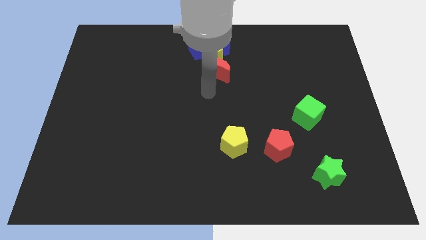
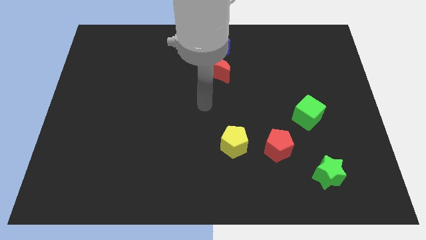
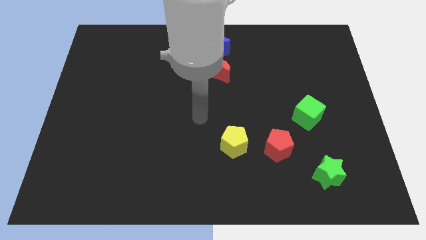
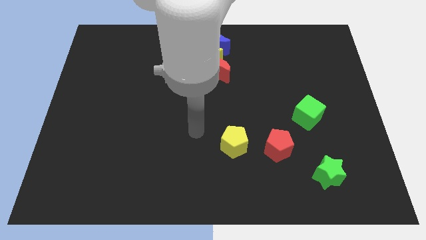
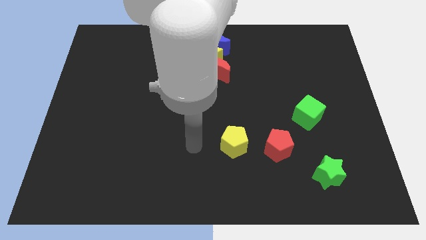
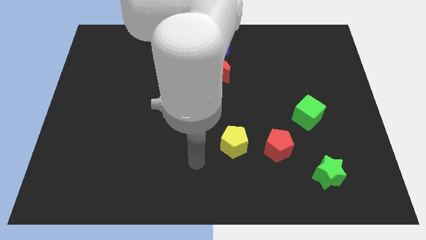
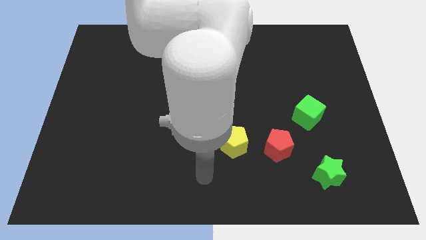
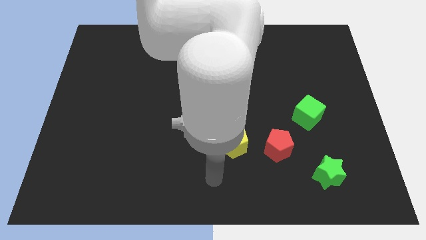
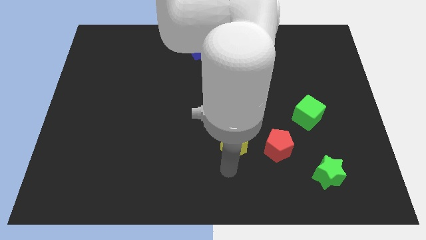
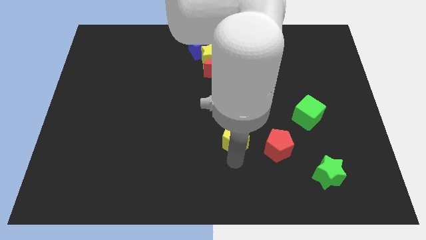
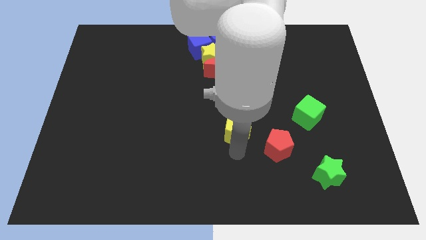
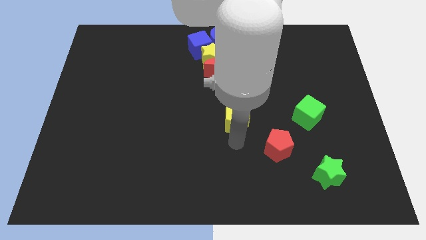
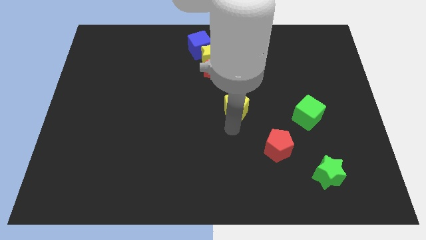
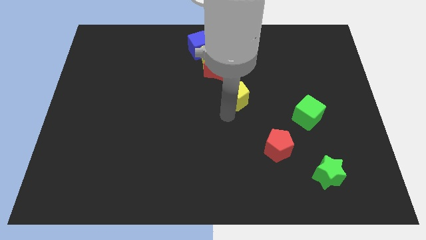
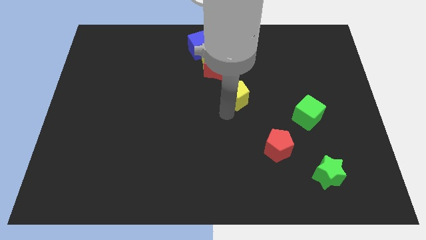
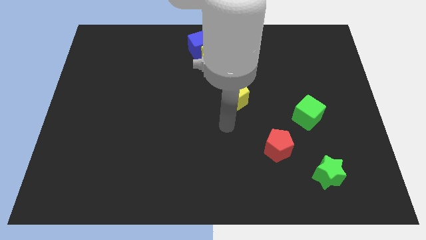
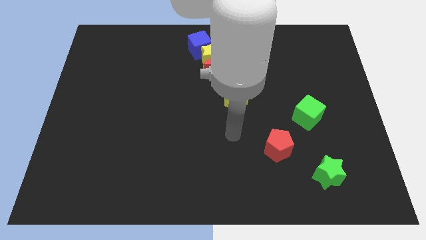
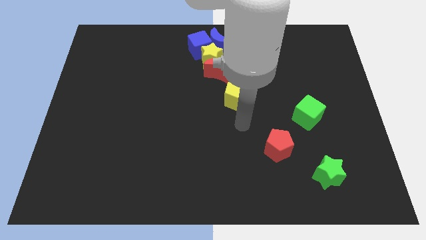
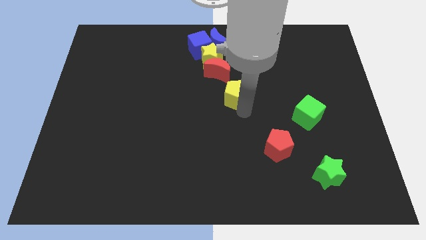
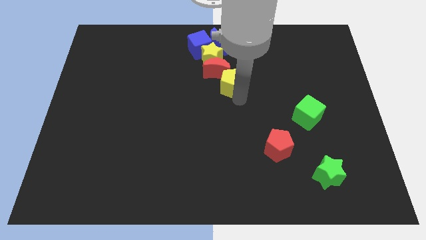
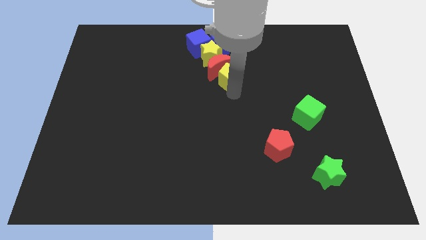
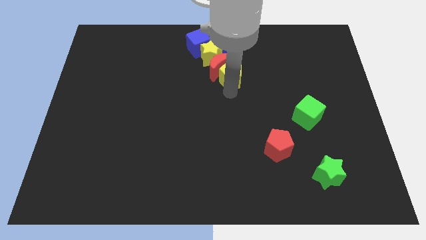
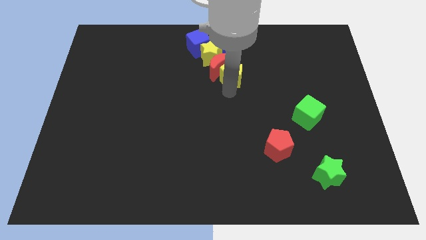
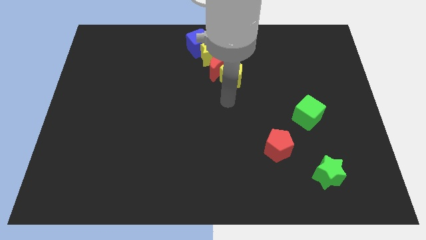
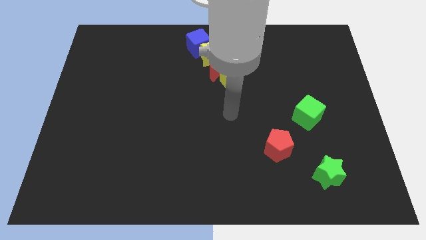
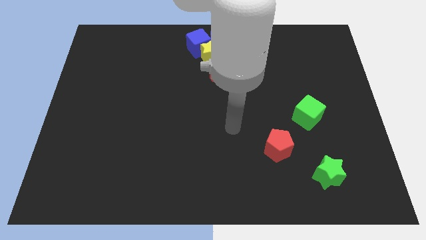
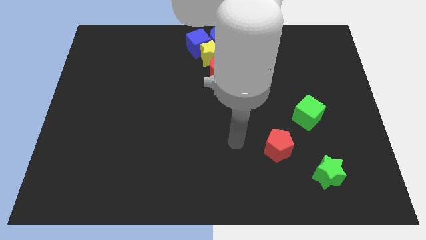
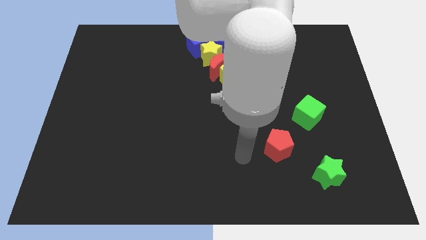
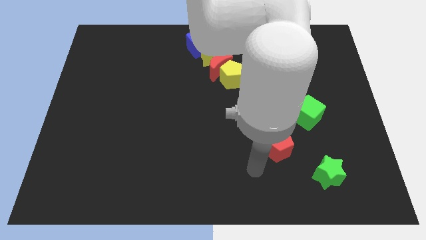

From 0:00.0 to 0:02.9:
push the yellow pentagon into the red crescent

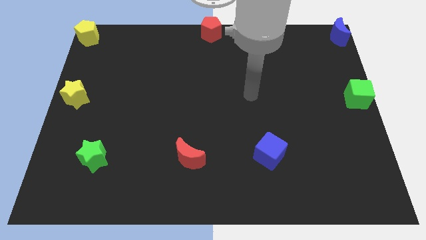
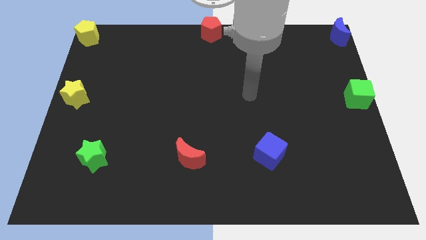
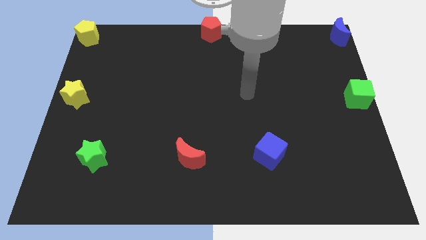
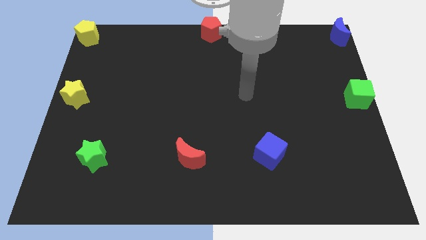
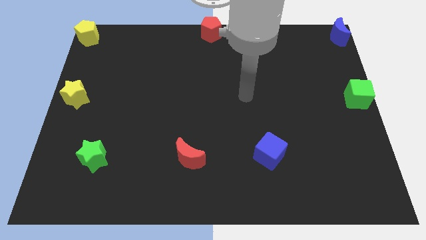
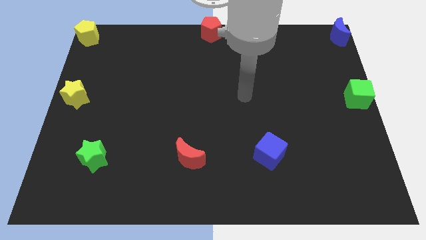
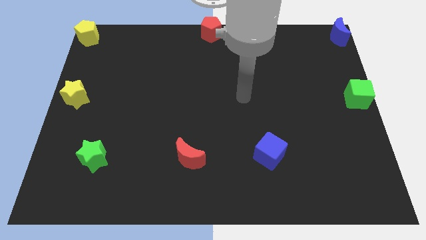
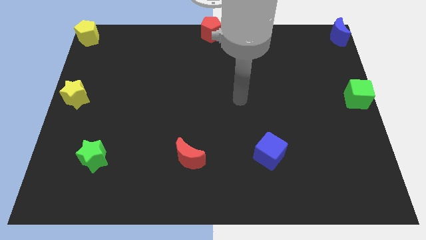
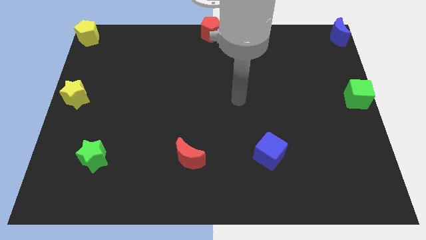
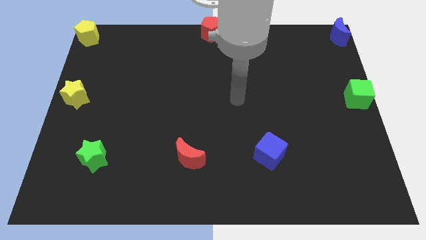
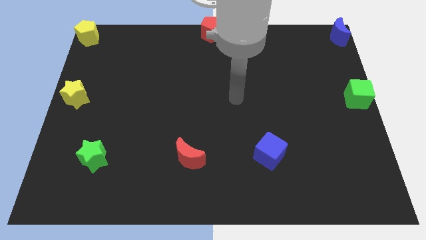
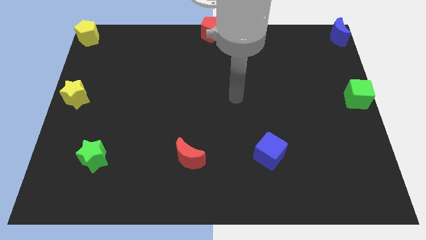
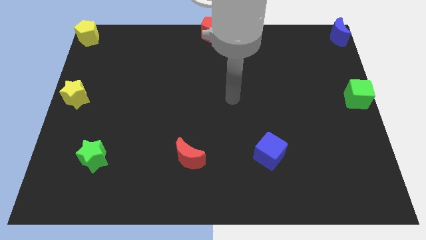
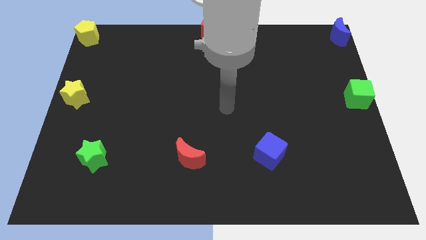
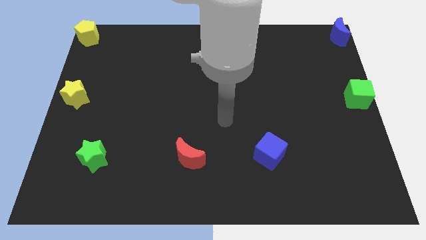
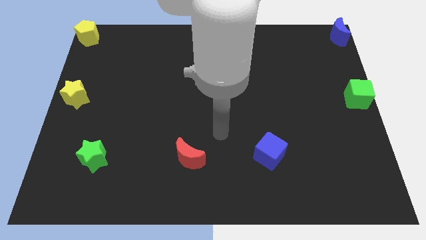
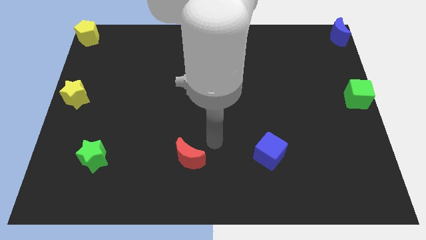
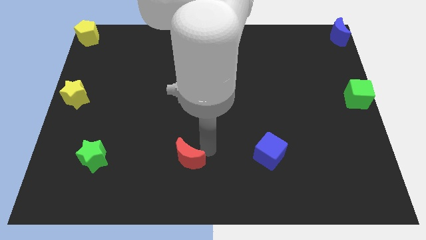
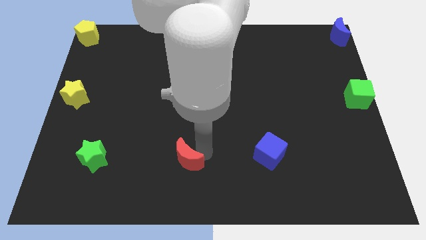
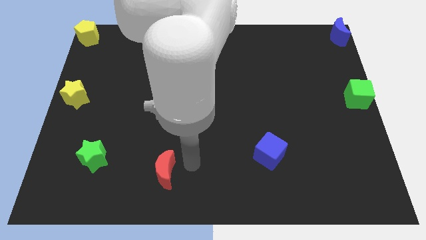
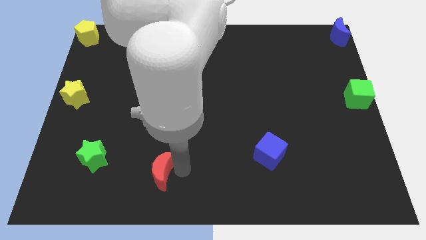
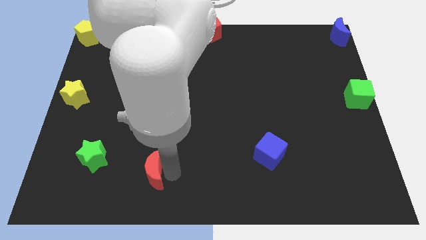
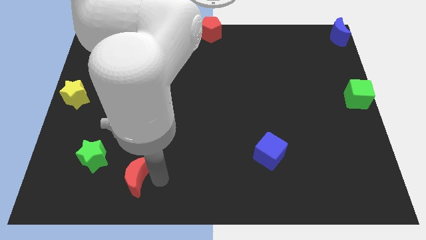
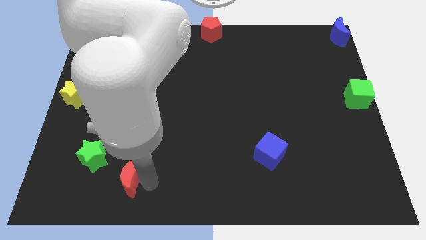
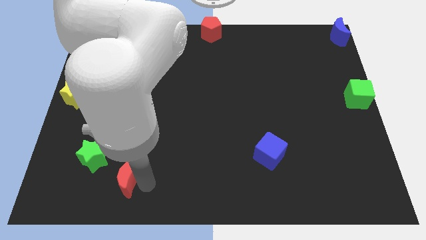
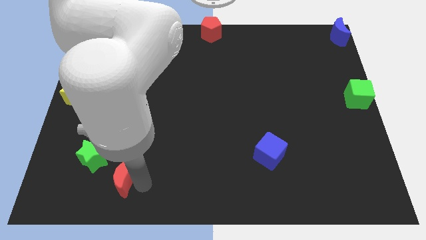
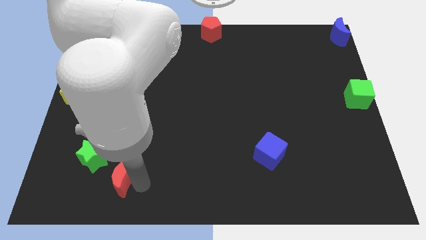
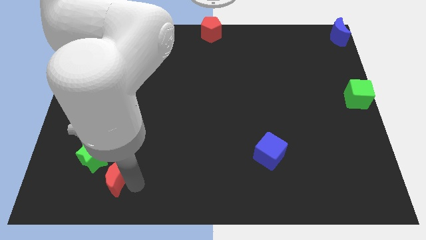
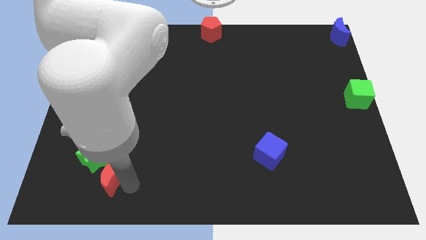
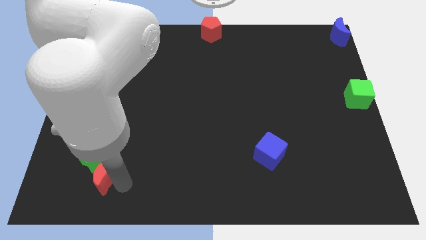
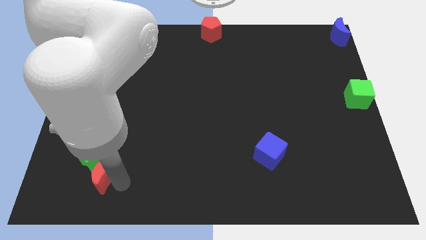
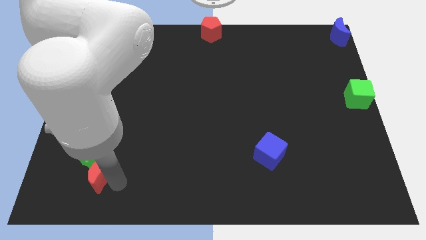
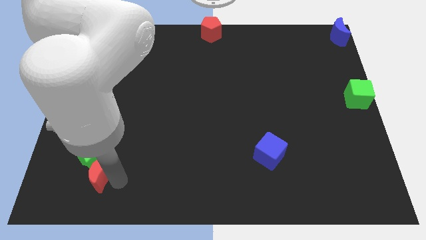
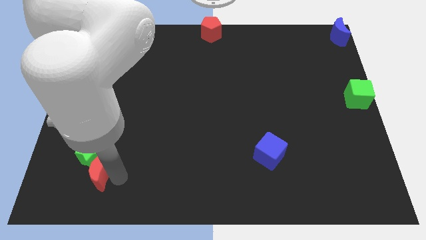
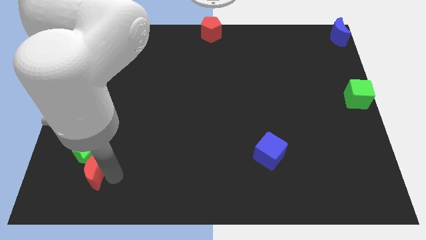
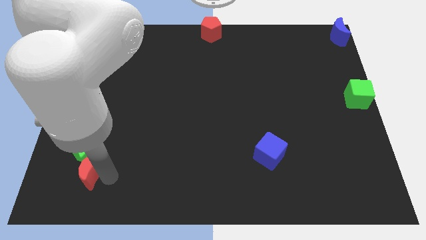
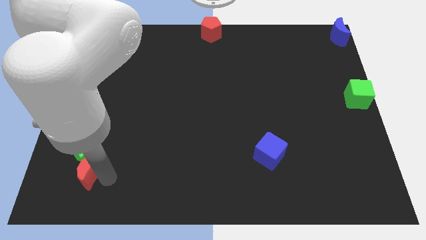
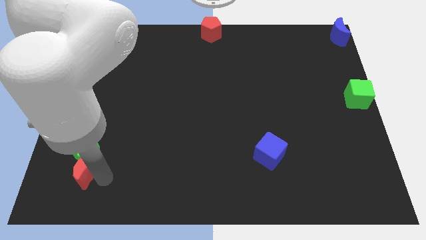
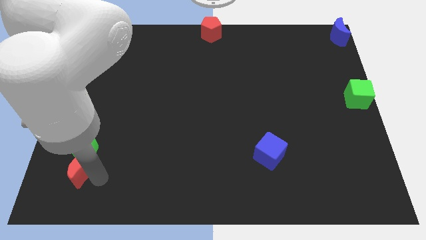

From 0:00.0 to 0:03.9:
slide red crescent into the green star

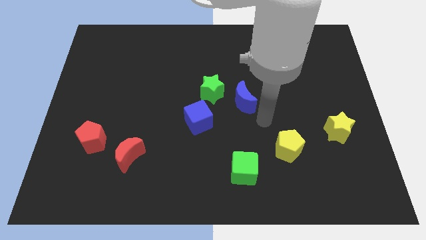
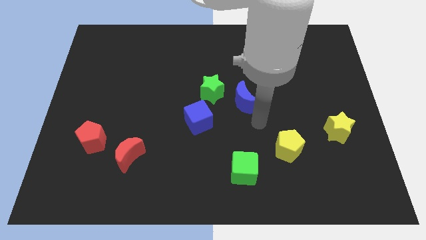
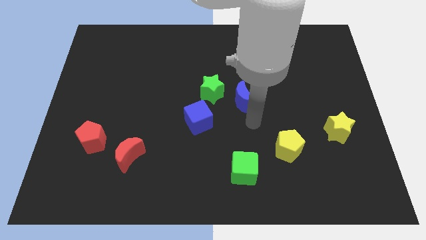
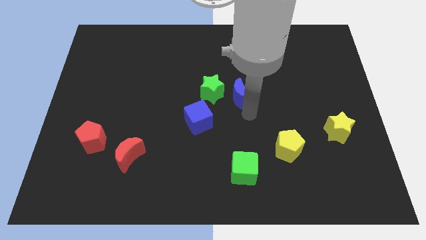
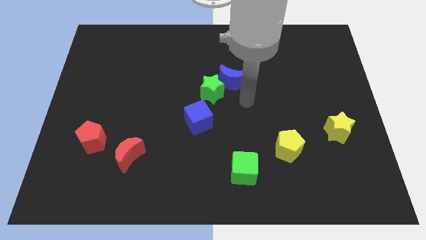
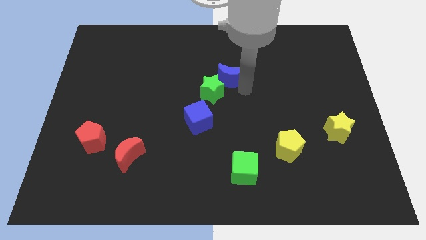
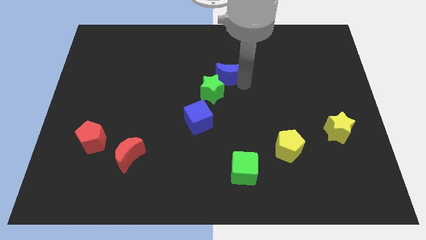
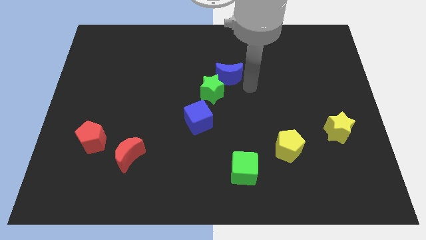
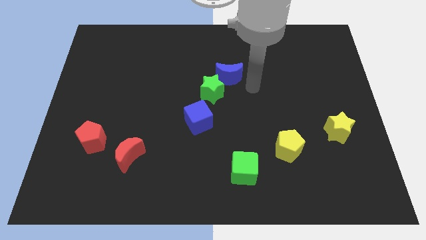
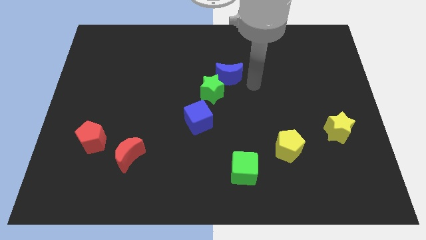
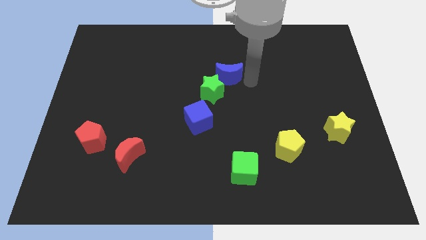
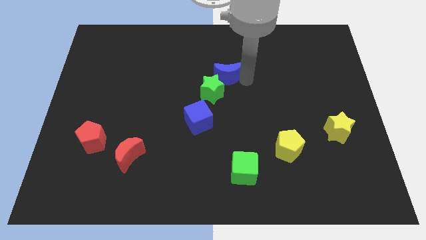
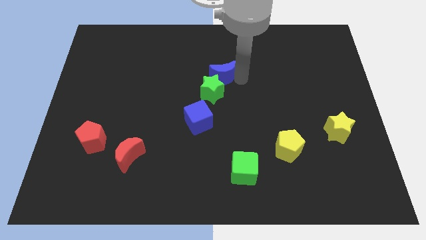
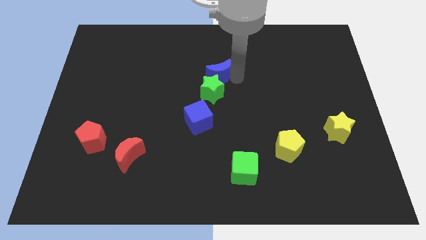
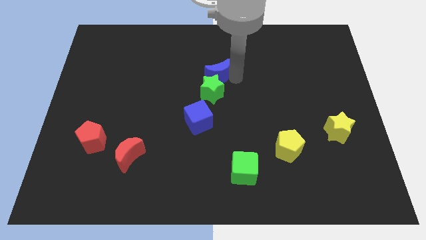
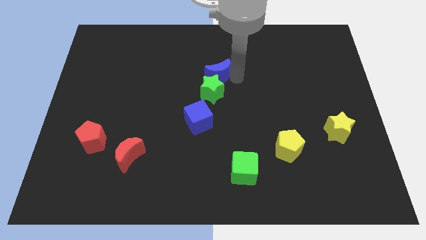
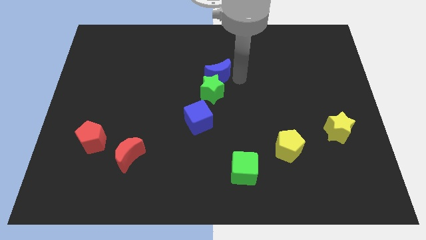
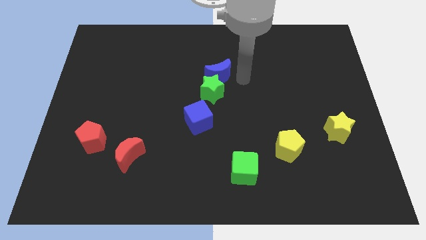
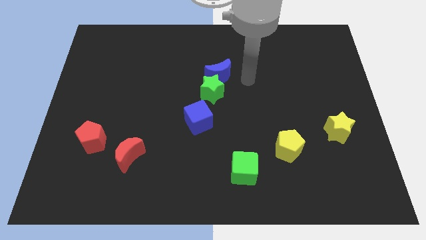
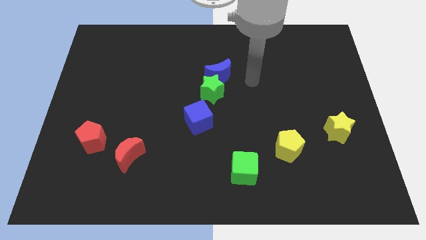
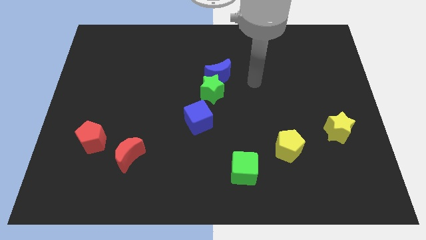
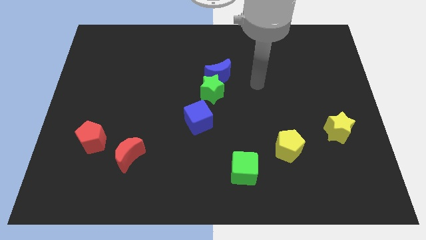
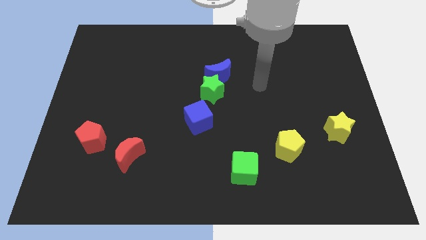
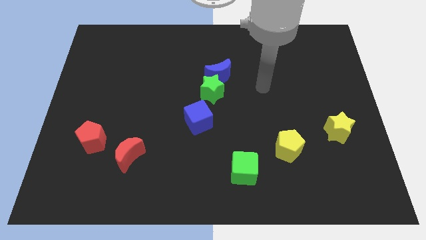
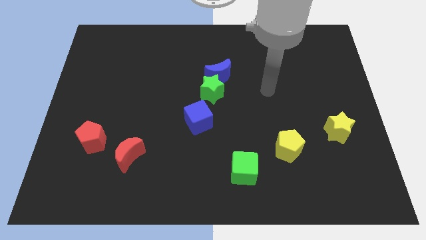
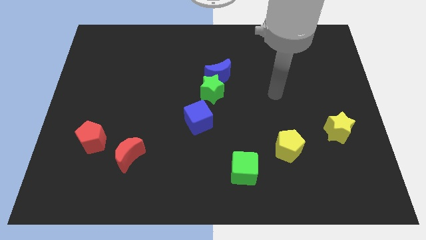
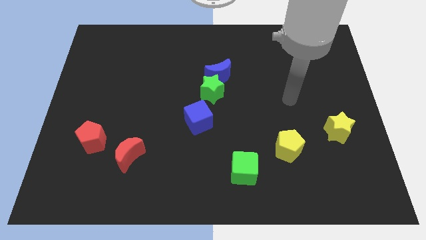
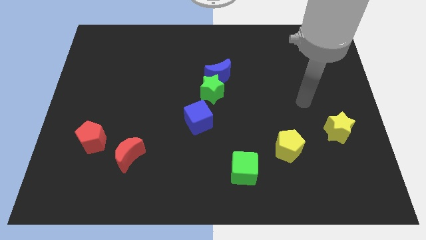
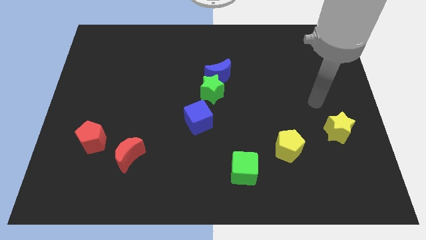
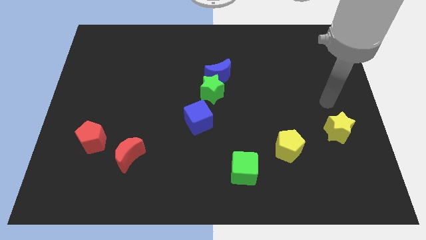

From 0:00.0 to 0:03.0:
push the blue crescent diagonally above
